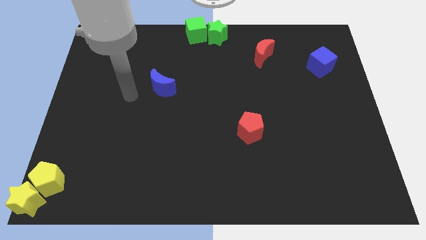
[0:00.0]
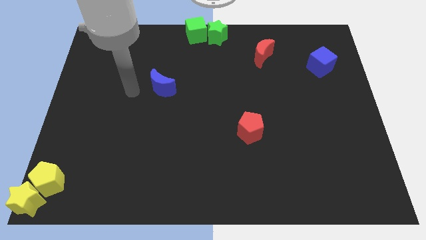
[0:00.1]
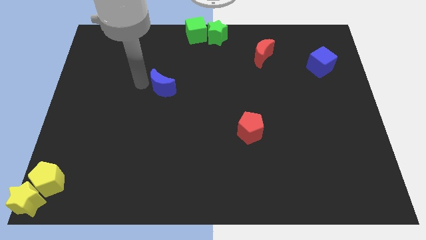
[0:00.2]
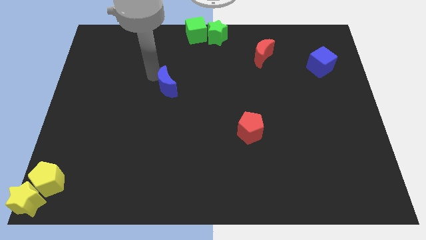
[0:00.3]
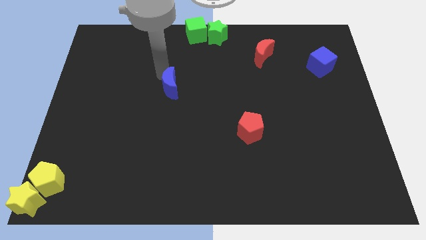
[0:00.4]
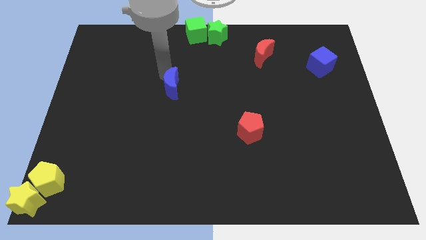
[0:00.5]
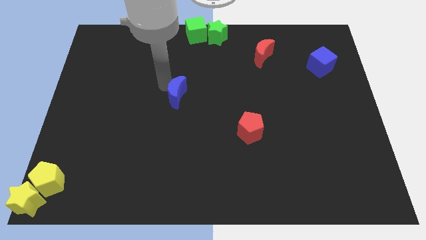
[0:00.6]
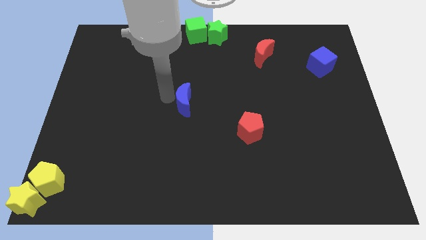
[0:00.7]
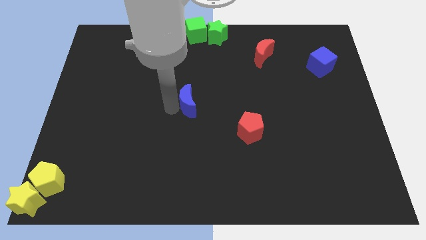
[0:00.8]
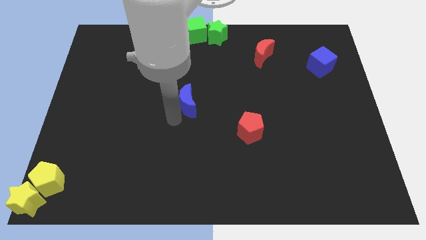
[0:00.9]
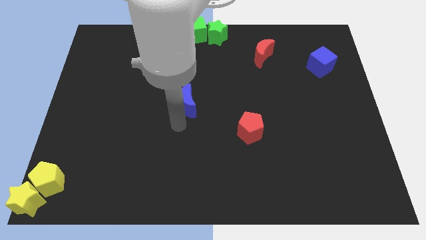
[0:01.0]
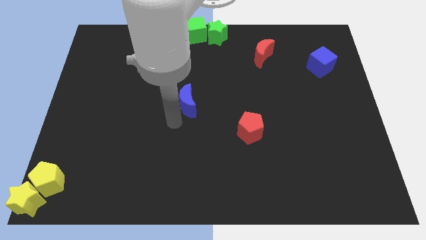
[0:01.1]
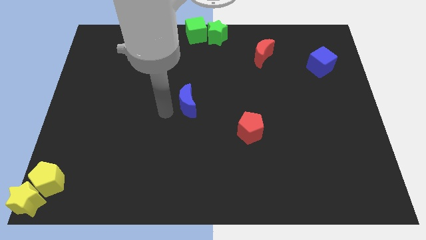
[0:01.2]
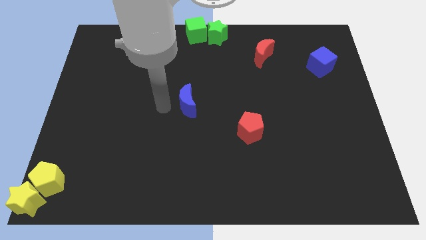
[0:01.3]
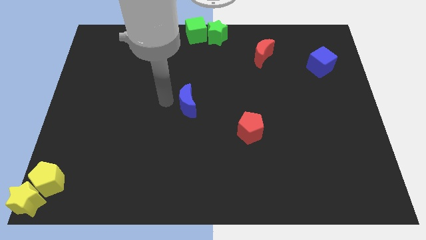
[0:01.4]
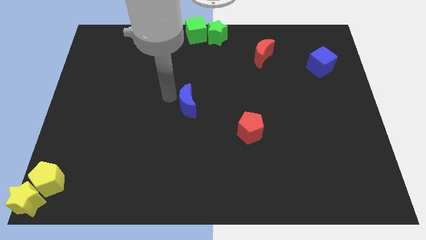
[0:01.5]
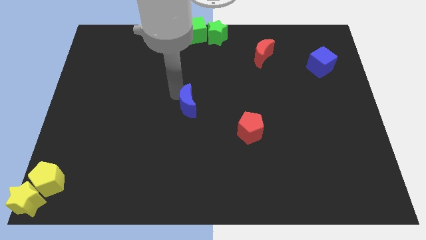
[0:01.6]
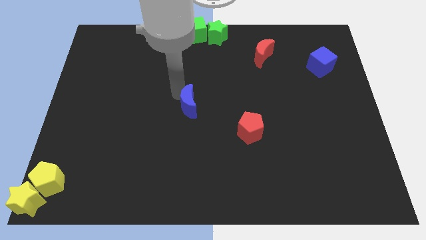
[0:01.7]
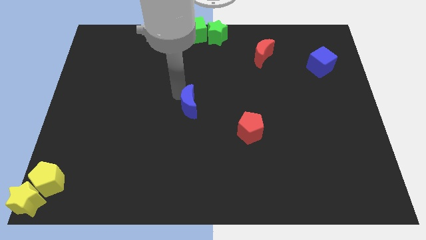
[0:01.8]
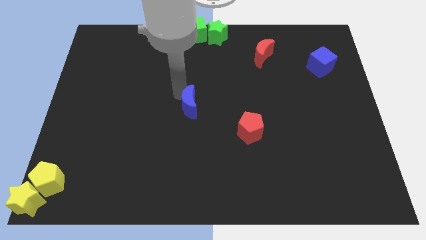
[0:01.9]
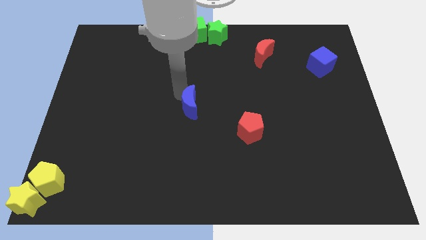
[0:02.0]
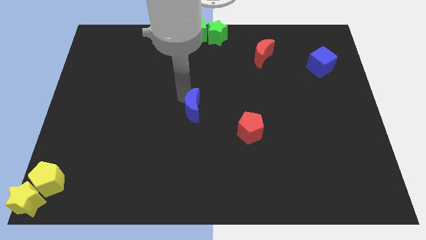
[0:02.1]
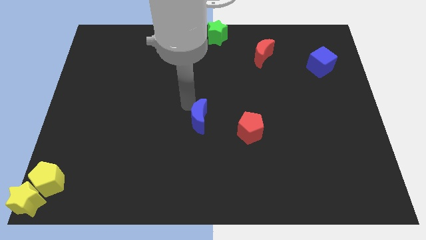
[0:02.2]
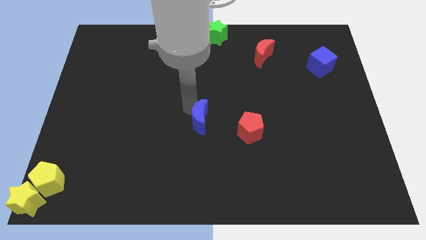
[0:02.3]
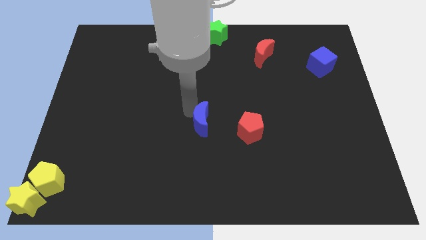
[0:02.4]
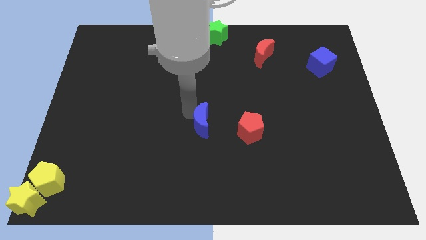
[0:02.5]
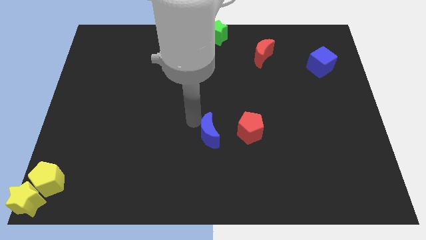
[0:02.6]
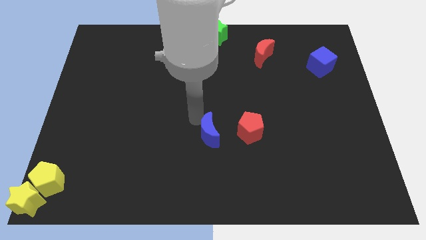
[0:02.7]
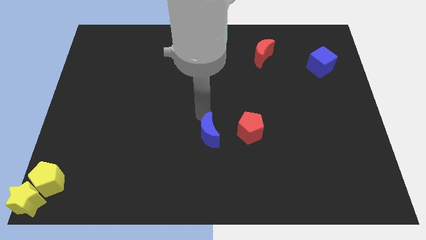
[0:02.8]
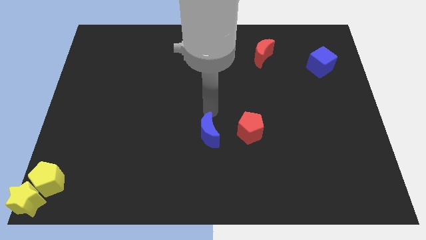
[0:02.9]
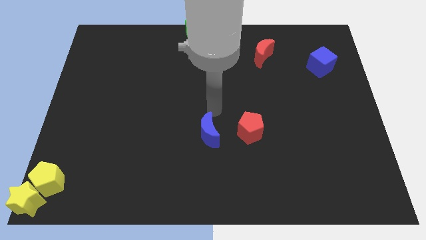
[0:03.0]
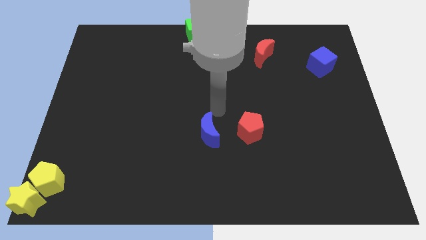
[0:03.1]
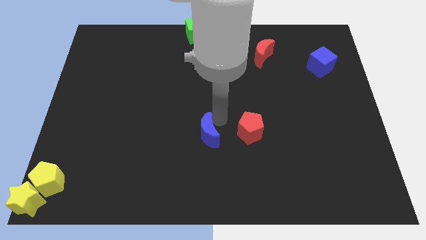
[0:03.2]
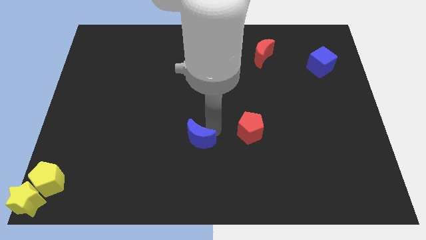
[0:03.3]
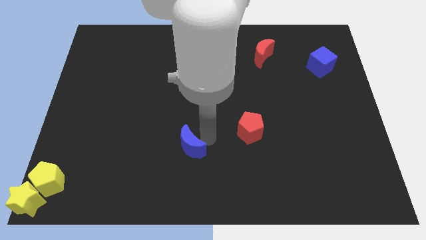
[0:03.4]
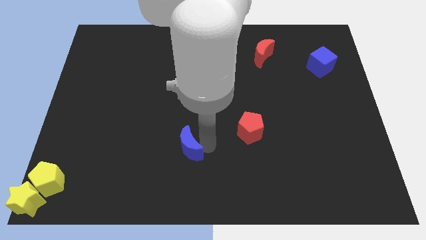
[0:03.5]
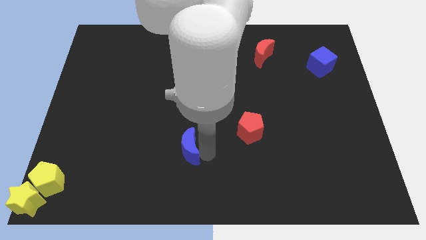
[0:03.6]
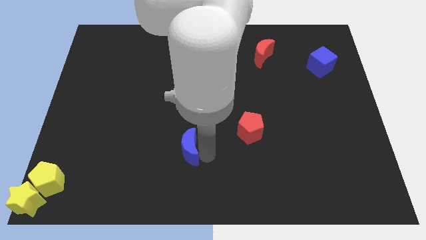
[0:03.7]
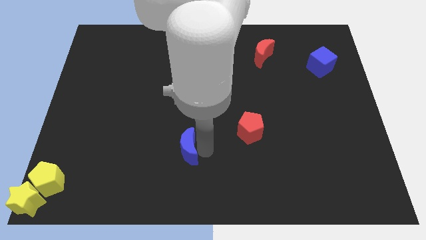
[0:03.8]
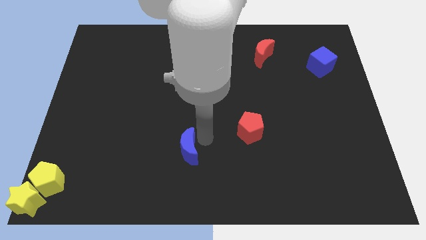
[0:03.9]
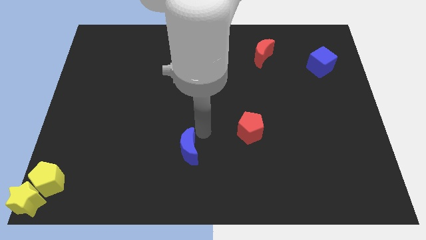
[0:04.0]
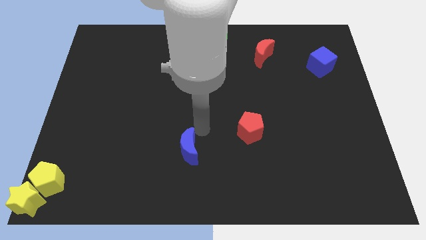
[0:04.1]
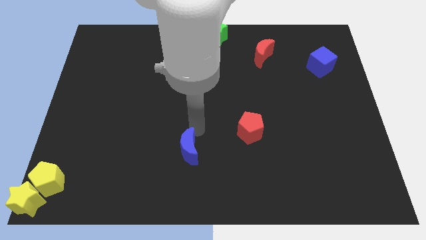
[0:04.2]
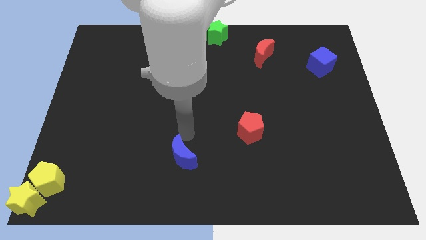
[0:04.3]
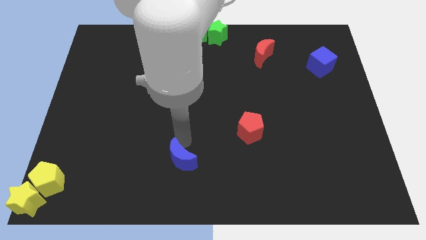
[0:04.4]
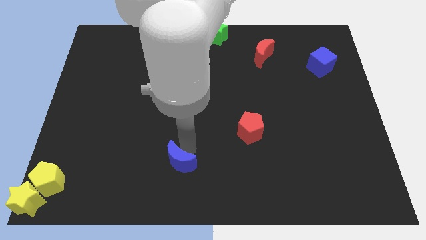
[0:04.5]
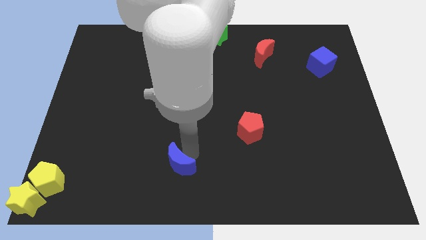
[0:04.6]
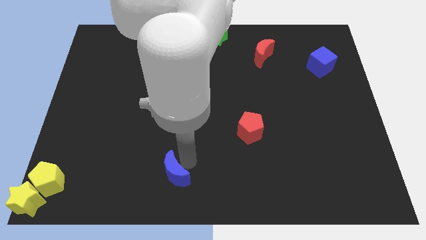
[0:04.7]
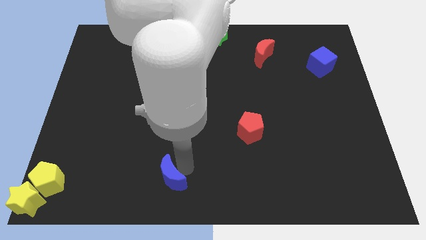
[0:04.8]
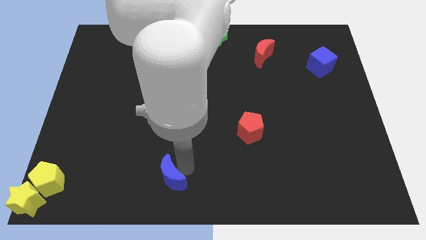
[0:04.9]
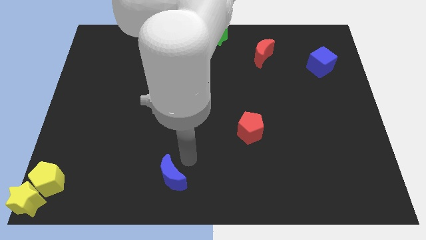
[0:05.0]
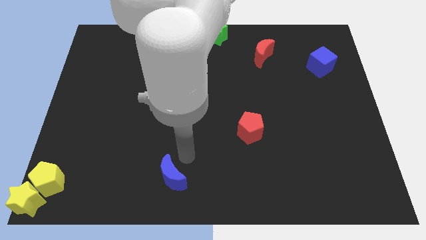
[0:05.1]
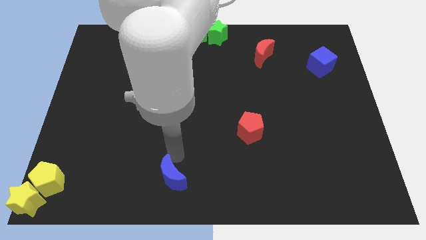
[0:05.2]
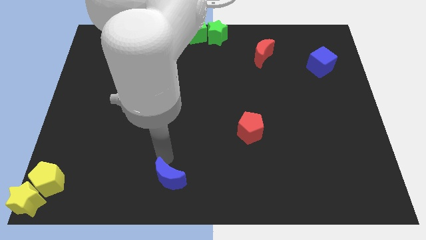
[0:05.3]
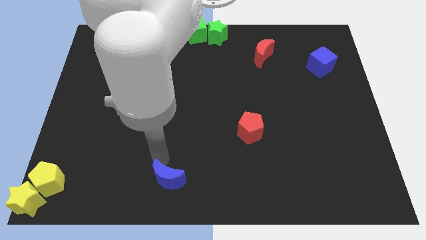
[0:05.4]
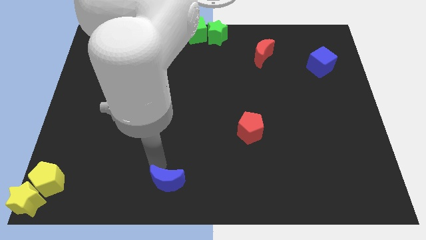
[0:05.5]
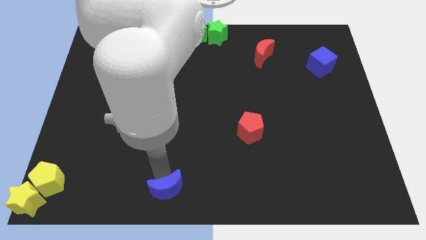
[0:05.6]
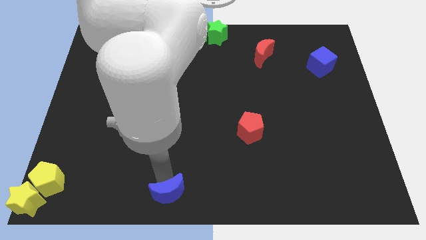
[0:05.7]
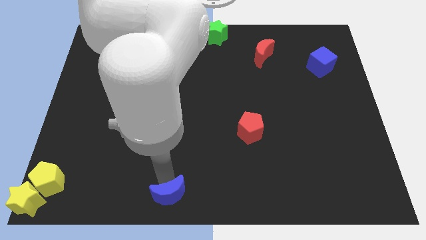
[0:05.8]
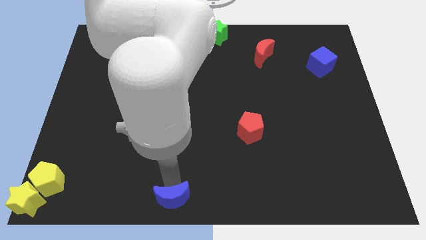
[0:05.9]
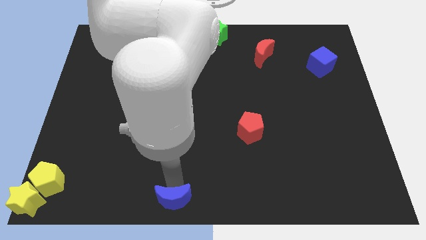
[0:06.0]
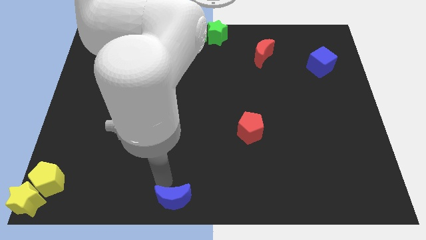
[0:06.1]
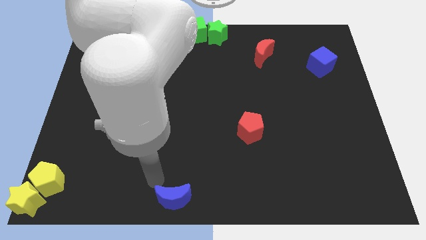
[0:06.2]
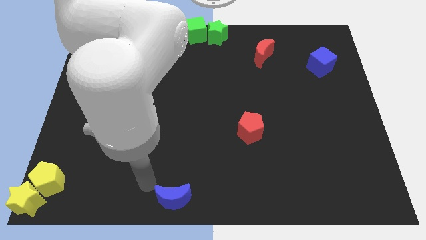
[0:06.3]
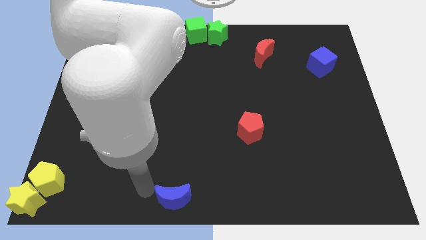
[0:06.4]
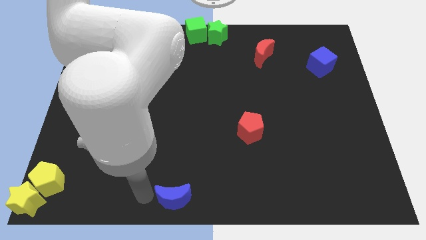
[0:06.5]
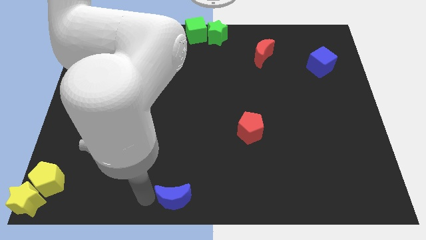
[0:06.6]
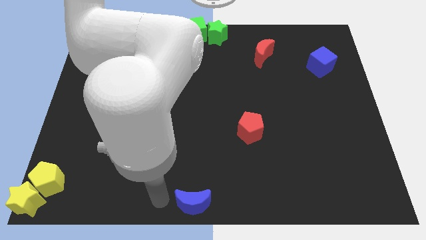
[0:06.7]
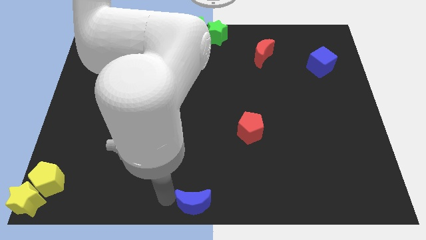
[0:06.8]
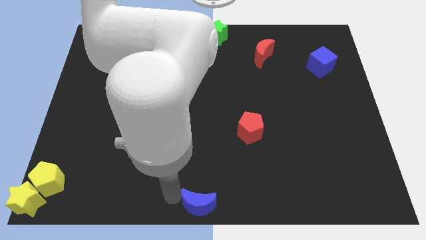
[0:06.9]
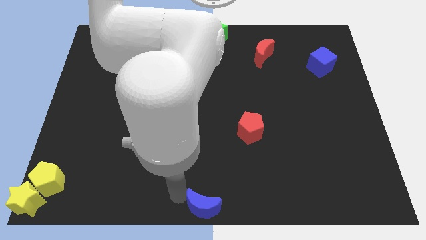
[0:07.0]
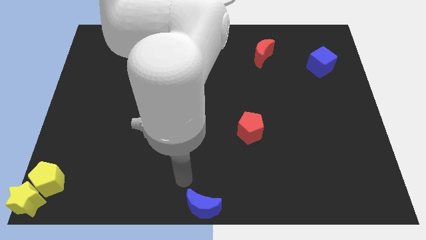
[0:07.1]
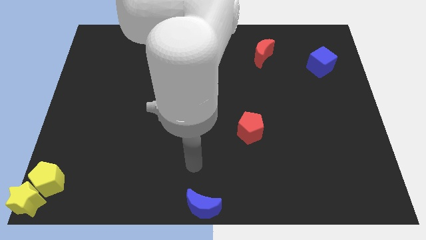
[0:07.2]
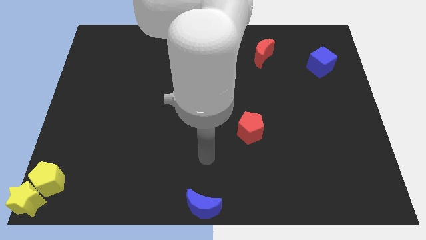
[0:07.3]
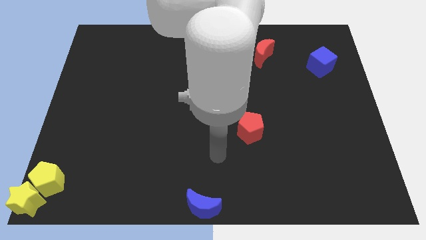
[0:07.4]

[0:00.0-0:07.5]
place the blue crescent to bottom center of the board

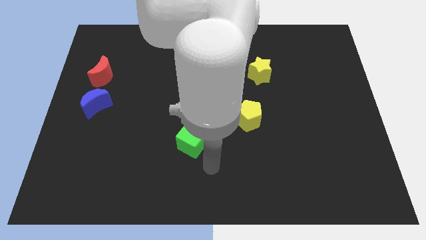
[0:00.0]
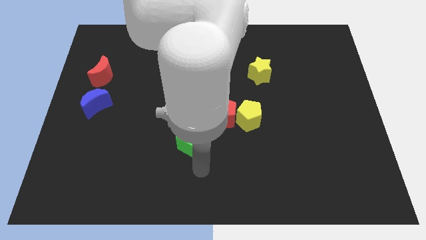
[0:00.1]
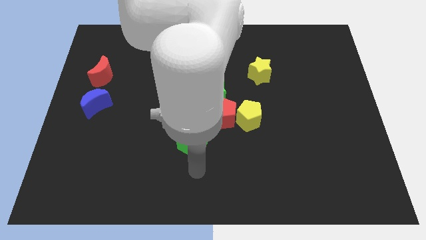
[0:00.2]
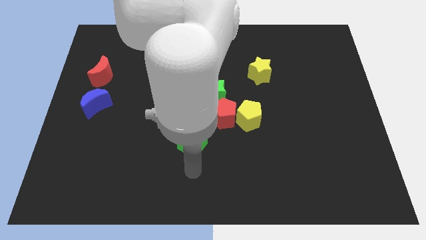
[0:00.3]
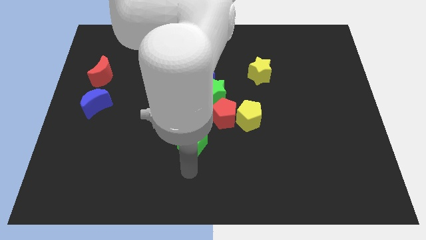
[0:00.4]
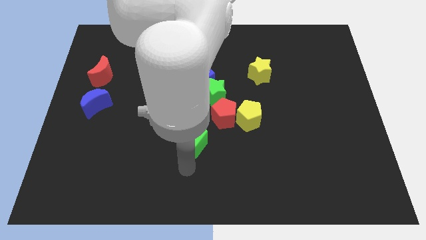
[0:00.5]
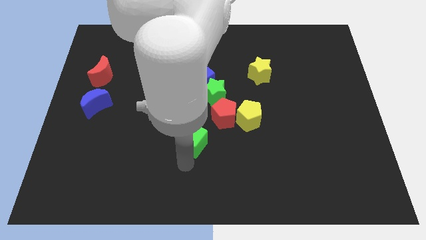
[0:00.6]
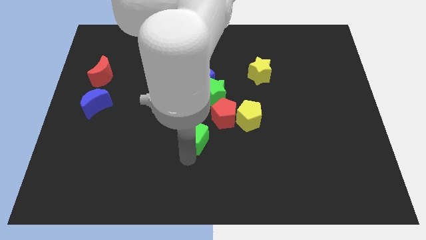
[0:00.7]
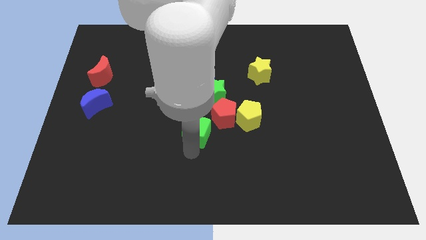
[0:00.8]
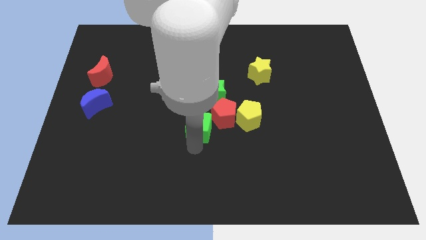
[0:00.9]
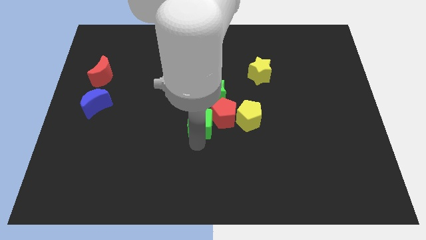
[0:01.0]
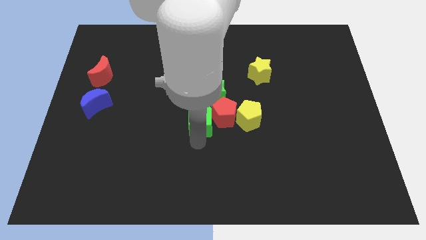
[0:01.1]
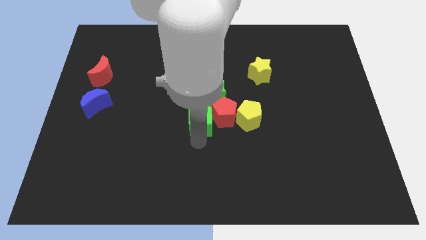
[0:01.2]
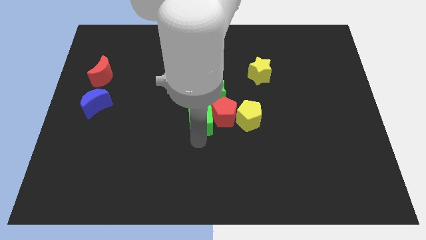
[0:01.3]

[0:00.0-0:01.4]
move the green cube to the left side of the red pentagon
